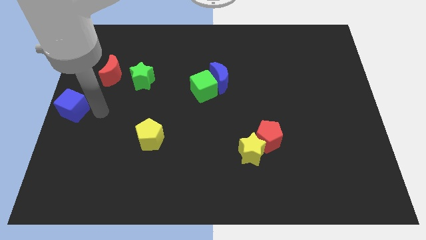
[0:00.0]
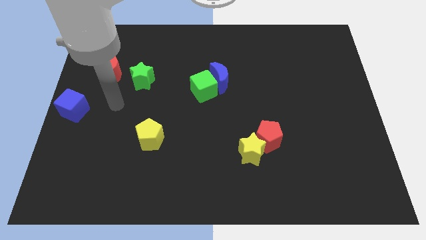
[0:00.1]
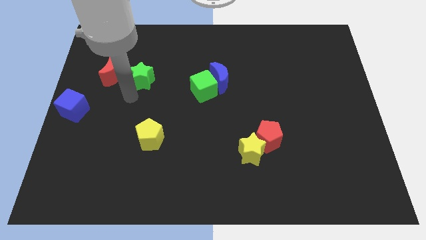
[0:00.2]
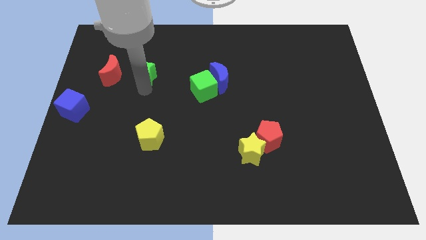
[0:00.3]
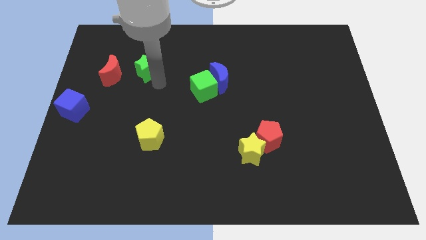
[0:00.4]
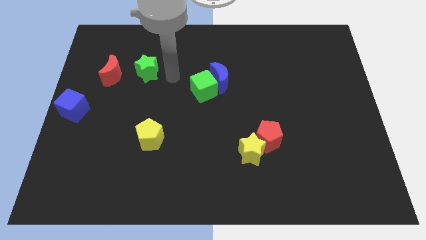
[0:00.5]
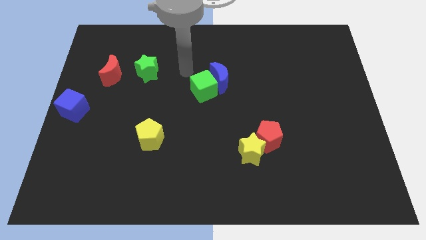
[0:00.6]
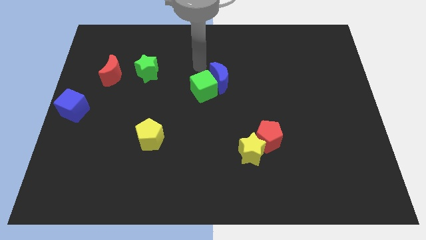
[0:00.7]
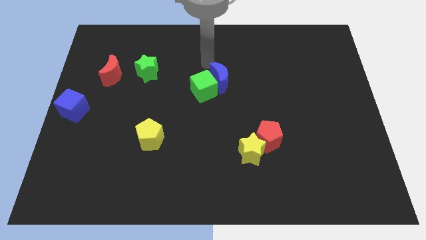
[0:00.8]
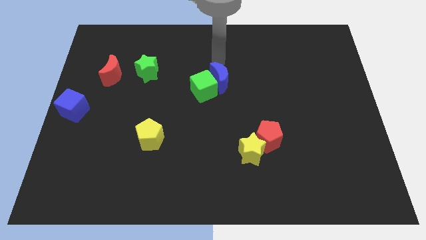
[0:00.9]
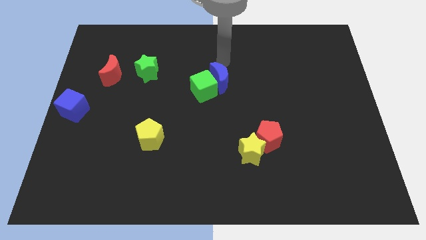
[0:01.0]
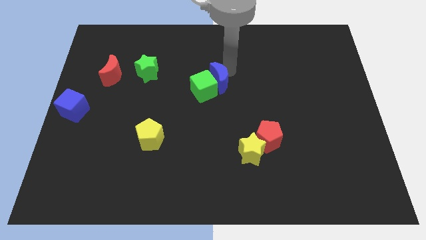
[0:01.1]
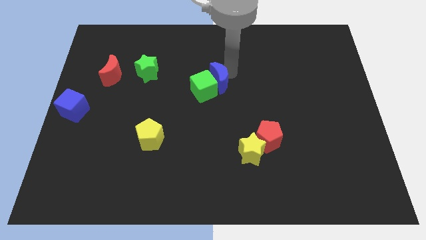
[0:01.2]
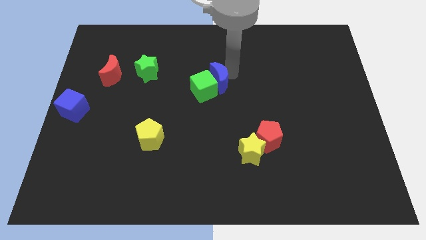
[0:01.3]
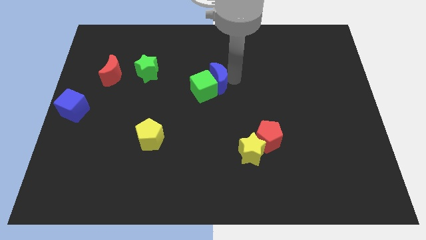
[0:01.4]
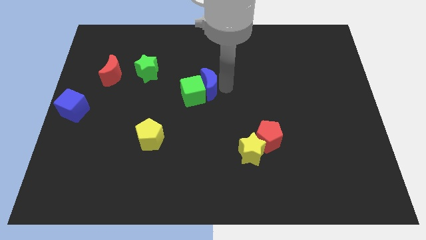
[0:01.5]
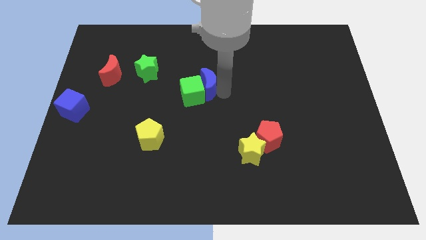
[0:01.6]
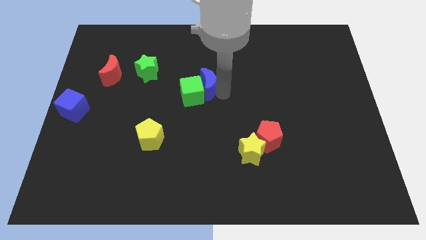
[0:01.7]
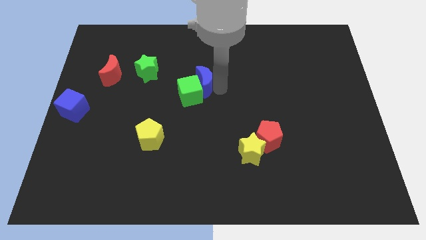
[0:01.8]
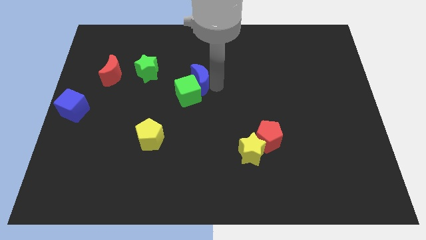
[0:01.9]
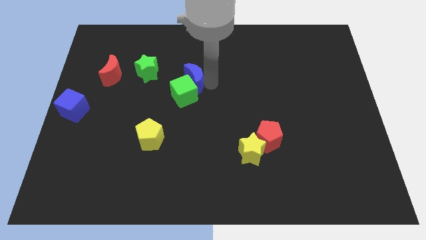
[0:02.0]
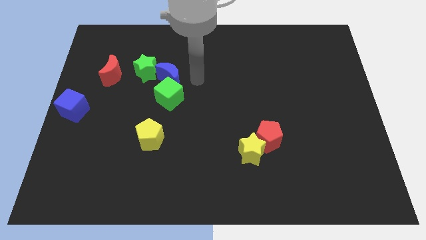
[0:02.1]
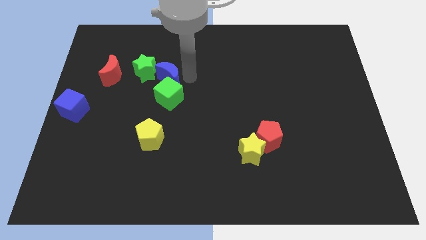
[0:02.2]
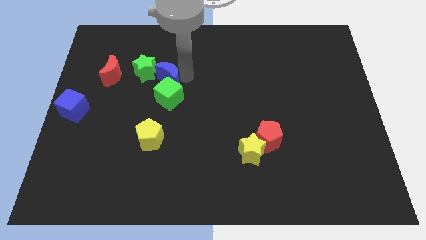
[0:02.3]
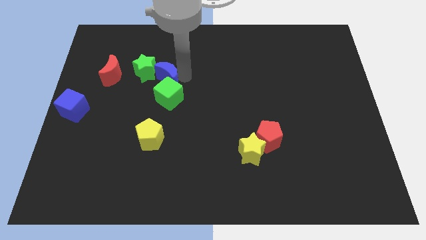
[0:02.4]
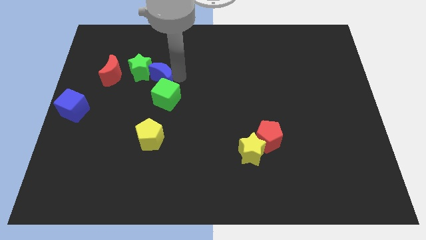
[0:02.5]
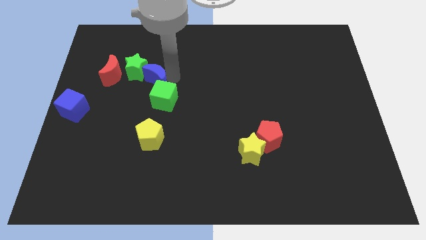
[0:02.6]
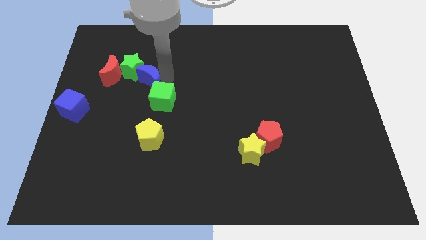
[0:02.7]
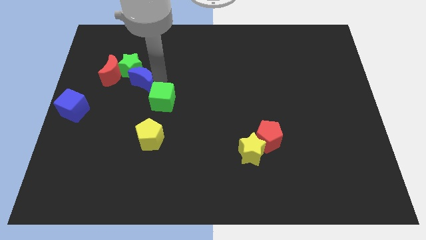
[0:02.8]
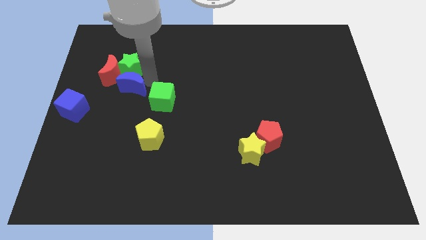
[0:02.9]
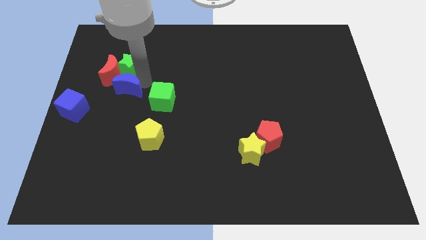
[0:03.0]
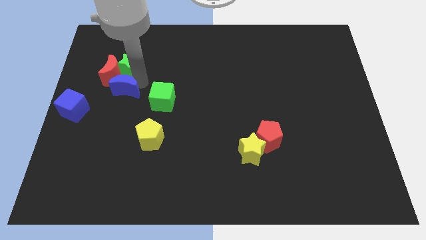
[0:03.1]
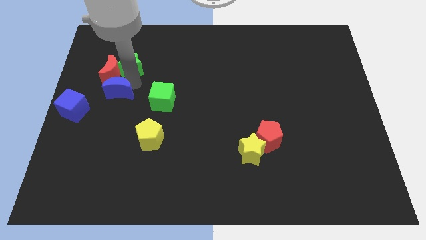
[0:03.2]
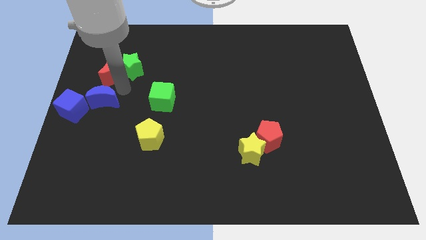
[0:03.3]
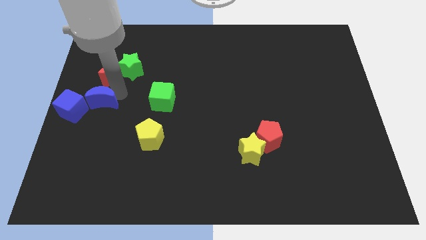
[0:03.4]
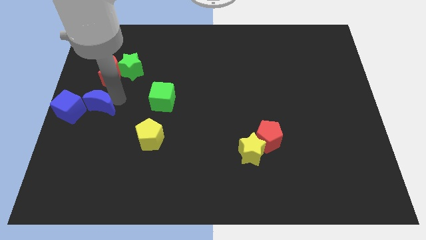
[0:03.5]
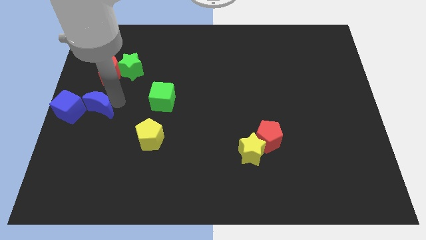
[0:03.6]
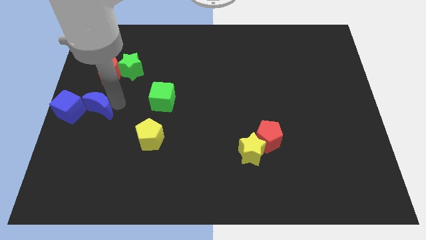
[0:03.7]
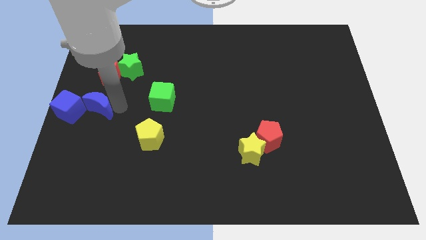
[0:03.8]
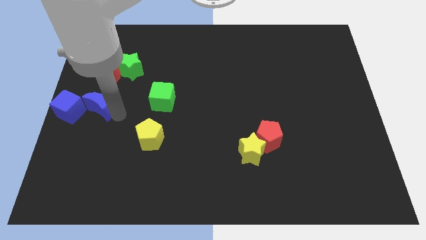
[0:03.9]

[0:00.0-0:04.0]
push the blue crescent to the right of the blue cube

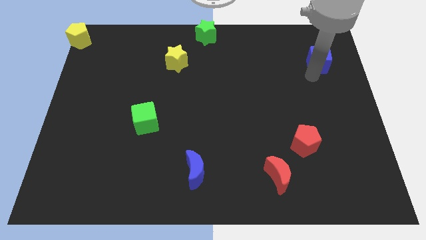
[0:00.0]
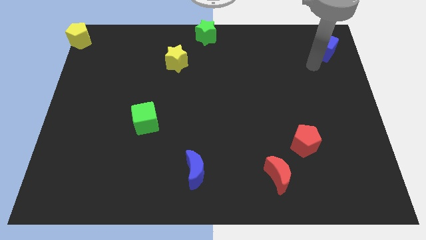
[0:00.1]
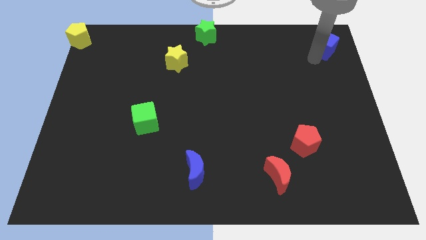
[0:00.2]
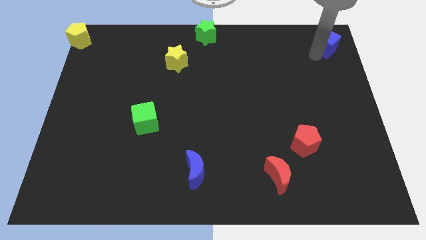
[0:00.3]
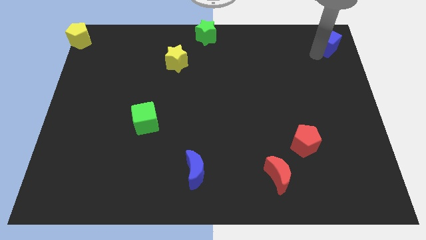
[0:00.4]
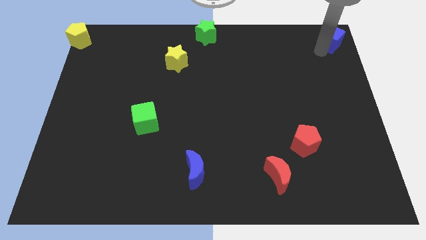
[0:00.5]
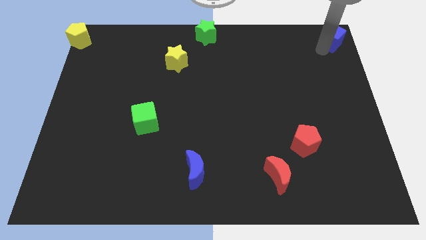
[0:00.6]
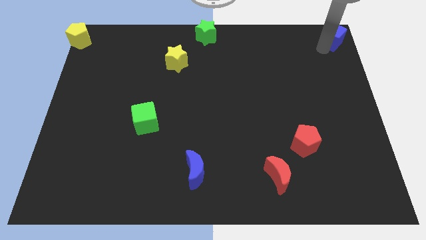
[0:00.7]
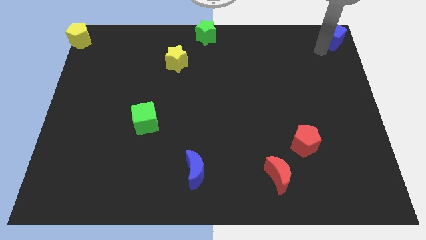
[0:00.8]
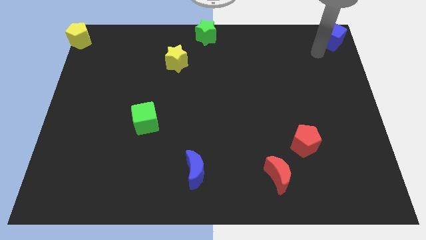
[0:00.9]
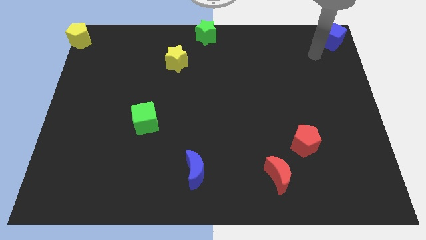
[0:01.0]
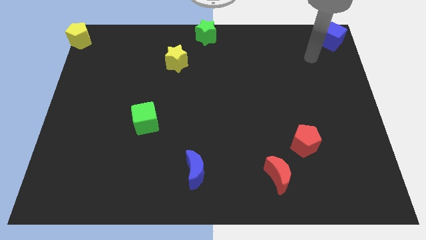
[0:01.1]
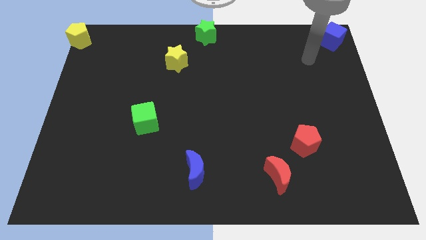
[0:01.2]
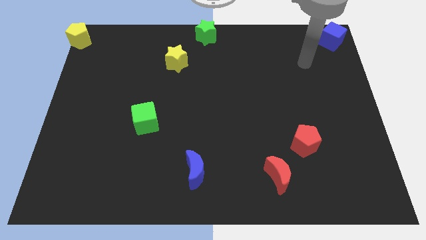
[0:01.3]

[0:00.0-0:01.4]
slide the blue cube towards the top right corner

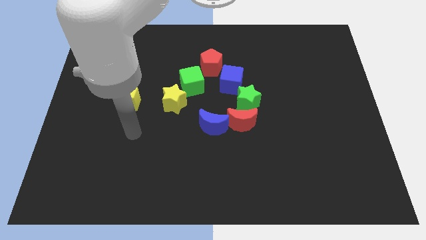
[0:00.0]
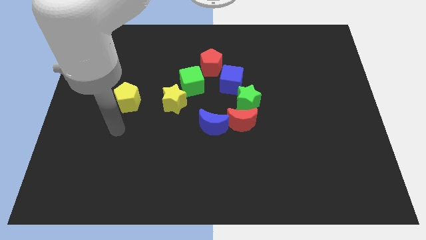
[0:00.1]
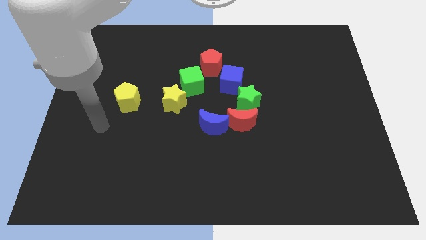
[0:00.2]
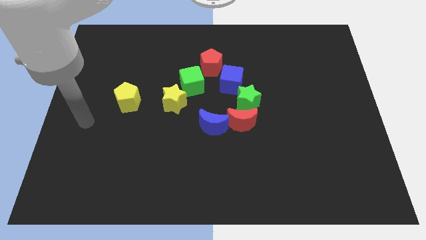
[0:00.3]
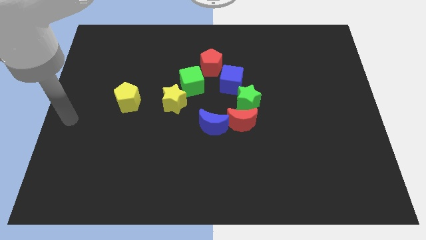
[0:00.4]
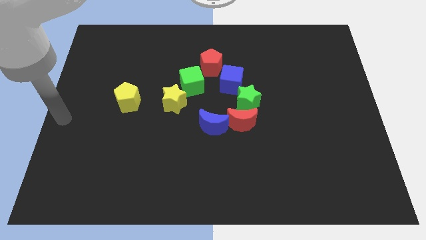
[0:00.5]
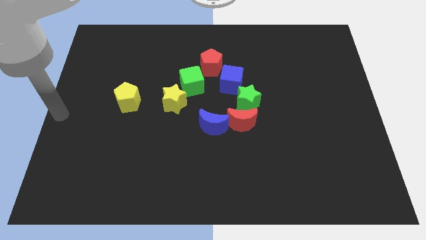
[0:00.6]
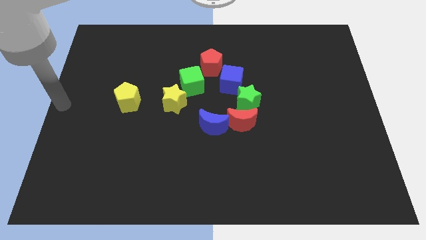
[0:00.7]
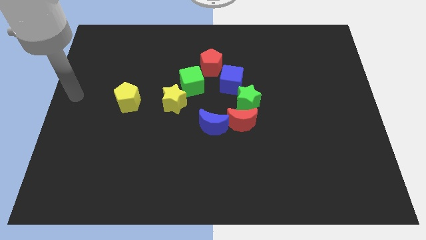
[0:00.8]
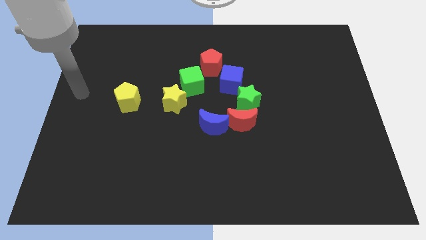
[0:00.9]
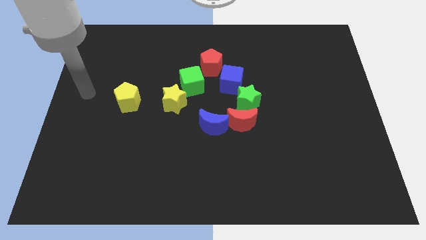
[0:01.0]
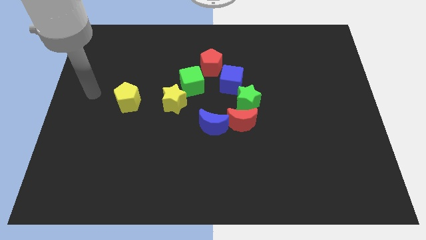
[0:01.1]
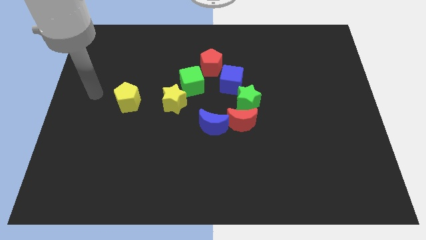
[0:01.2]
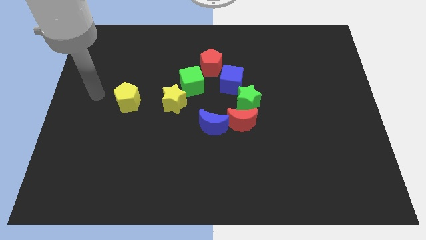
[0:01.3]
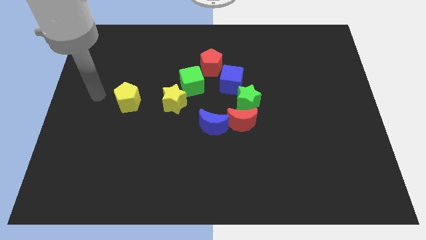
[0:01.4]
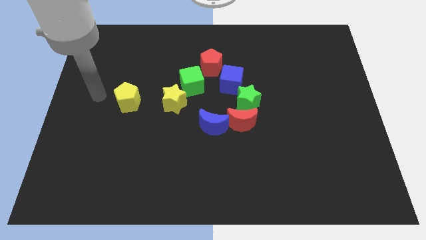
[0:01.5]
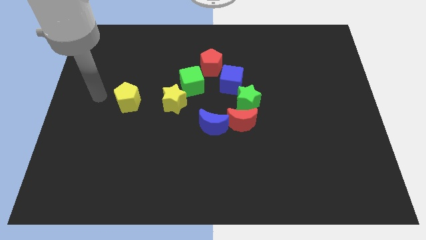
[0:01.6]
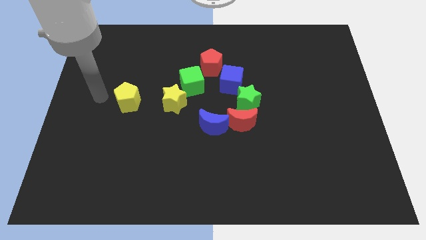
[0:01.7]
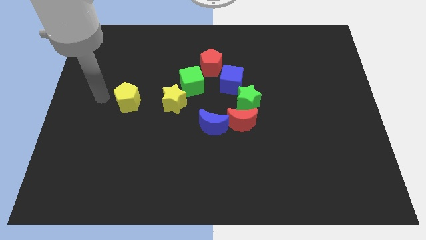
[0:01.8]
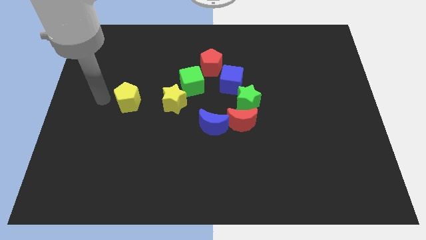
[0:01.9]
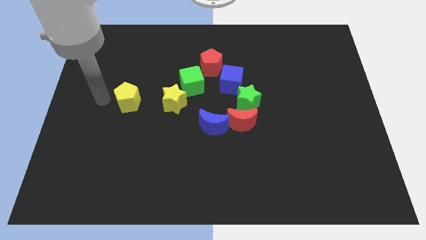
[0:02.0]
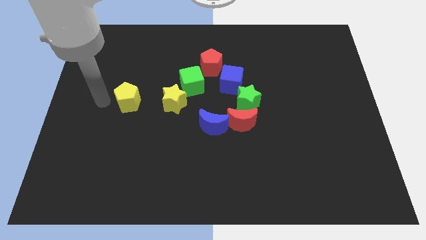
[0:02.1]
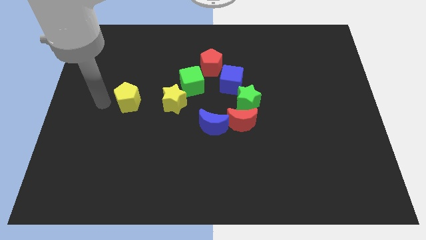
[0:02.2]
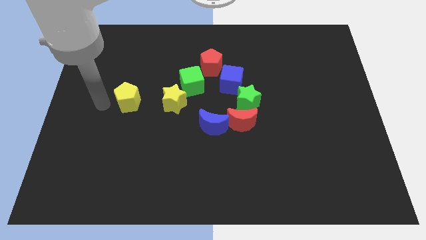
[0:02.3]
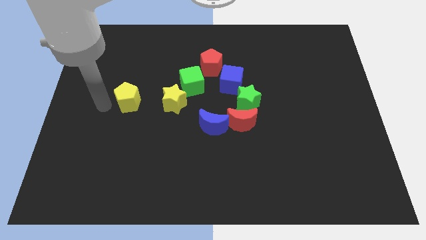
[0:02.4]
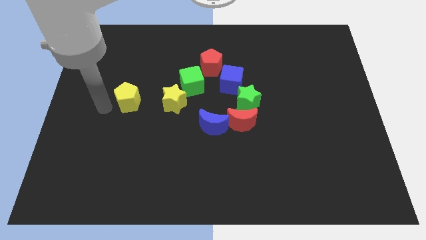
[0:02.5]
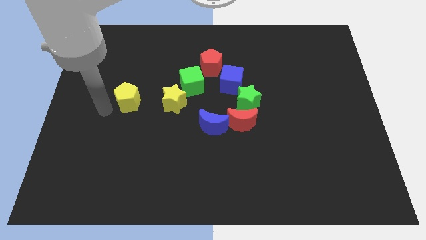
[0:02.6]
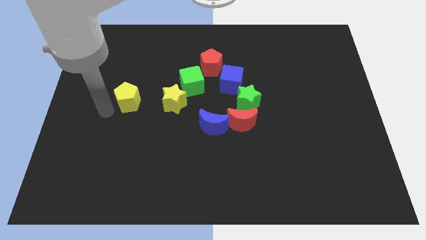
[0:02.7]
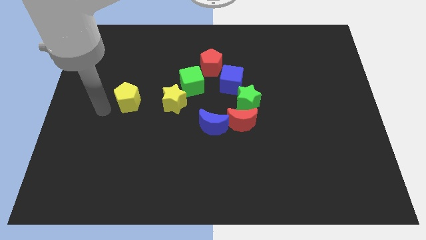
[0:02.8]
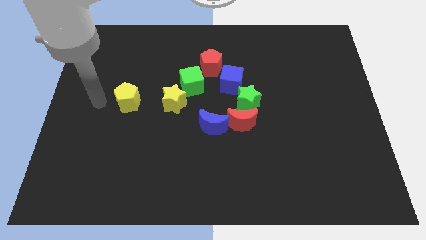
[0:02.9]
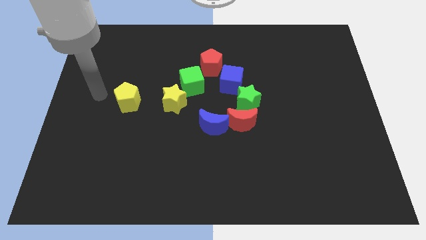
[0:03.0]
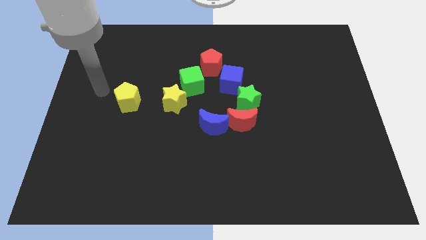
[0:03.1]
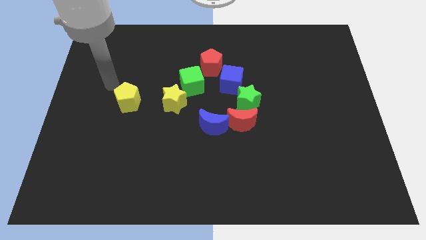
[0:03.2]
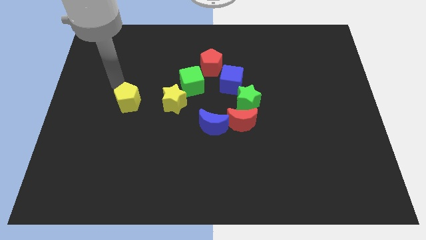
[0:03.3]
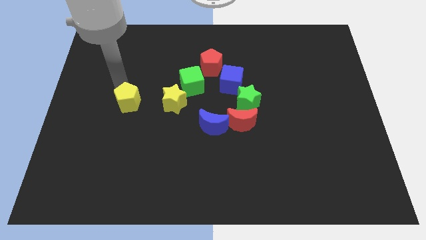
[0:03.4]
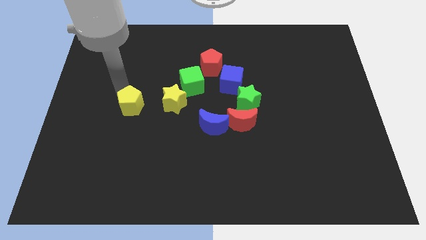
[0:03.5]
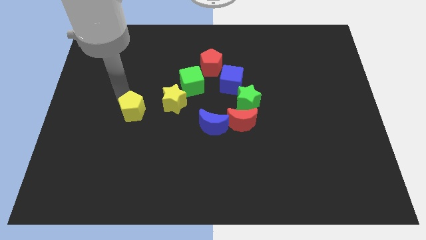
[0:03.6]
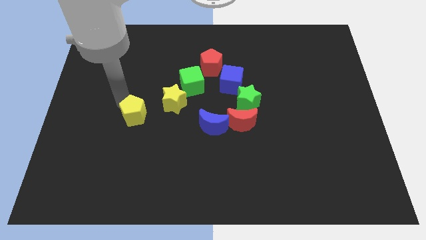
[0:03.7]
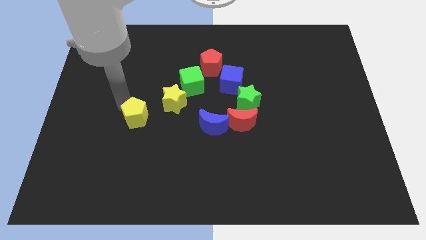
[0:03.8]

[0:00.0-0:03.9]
move your arm close to the yellow pentagon
